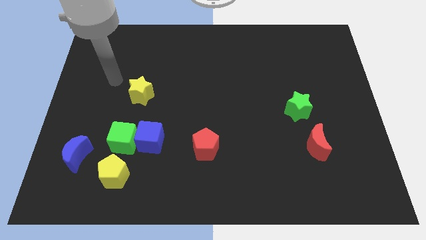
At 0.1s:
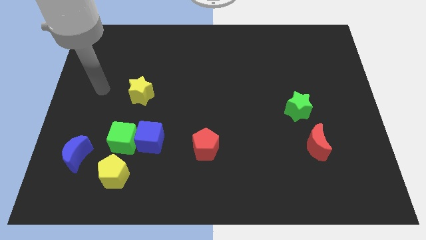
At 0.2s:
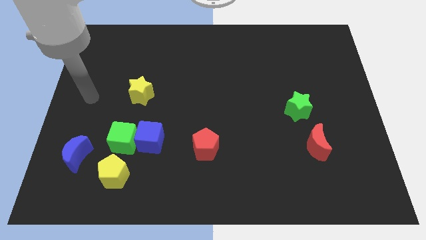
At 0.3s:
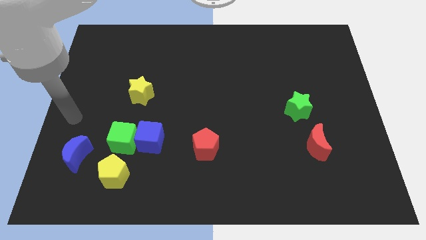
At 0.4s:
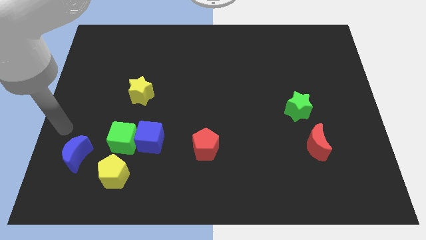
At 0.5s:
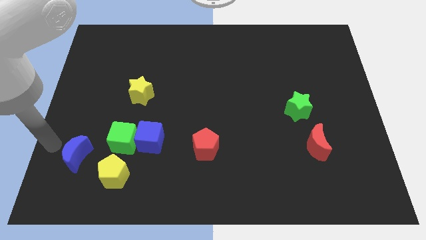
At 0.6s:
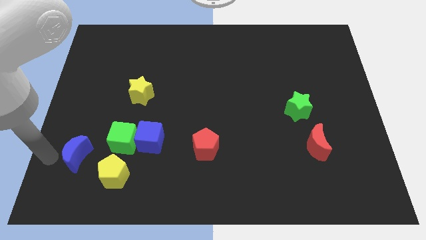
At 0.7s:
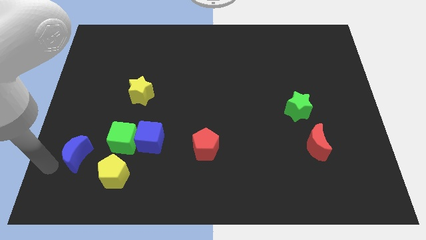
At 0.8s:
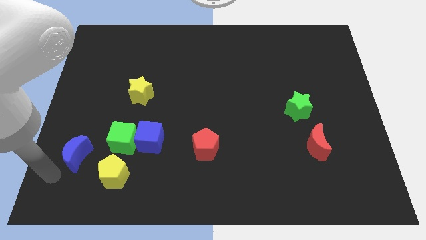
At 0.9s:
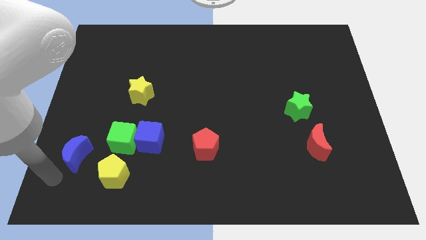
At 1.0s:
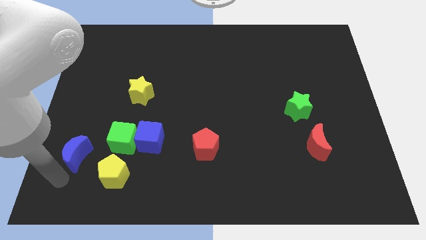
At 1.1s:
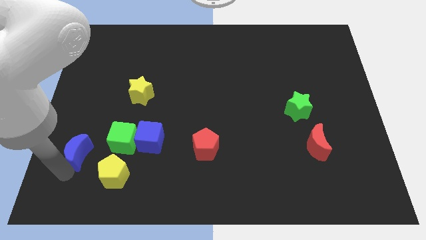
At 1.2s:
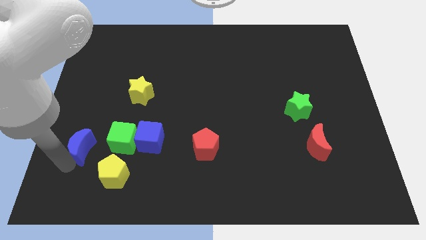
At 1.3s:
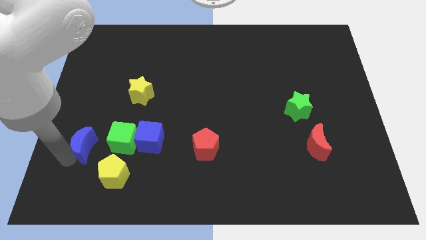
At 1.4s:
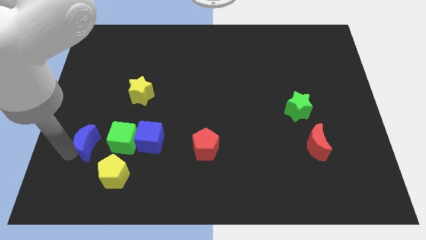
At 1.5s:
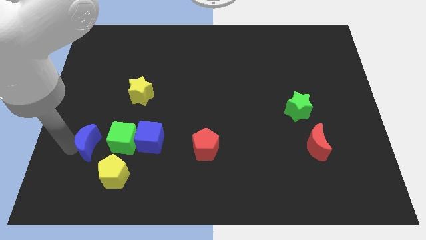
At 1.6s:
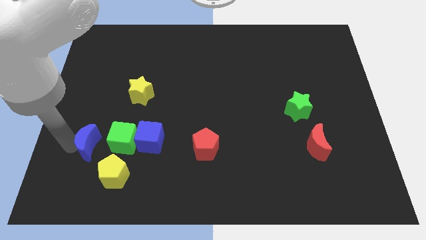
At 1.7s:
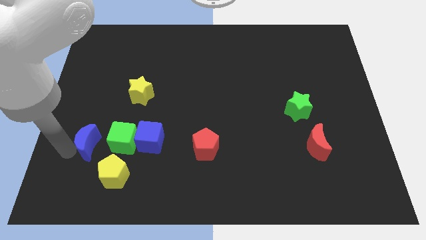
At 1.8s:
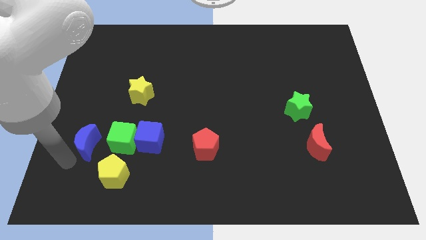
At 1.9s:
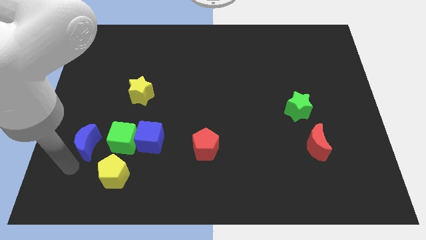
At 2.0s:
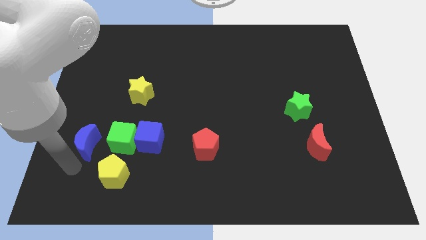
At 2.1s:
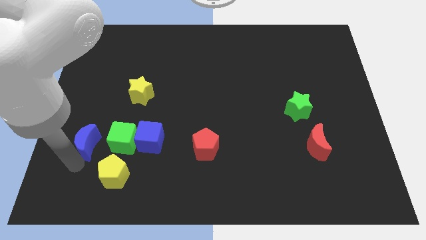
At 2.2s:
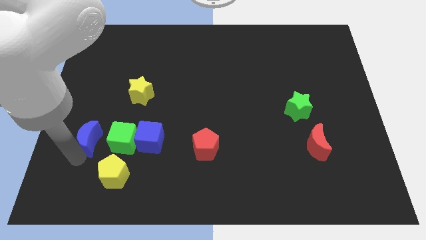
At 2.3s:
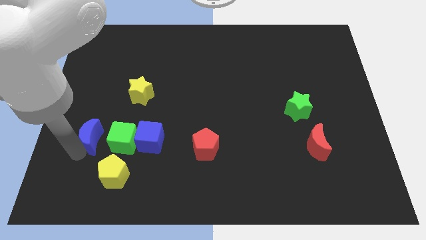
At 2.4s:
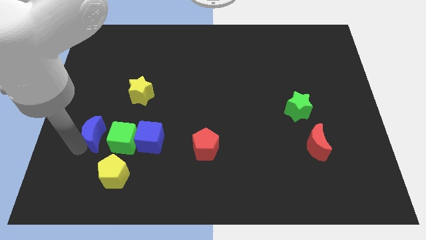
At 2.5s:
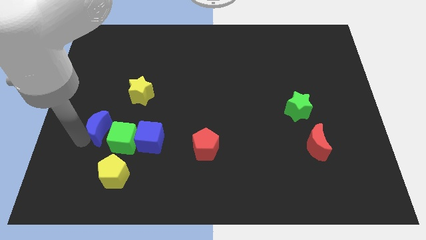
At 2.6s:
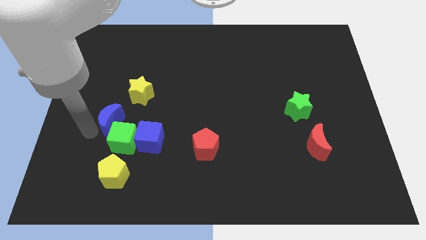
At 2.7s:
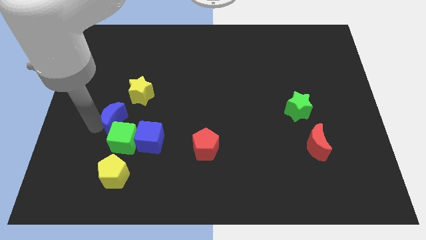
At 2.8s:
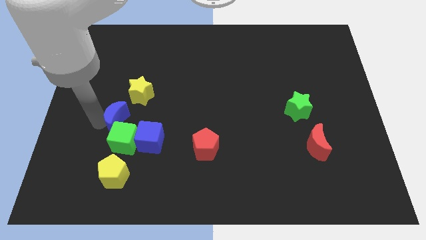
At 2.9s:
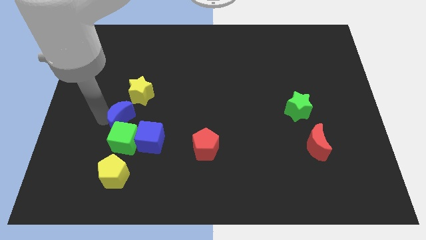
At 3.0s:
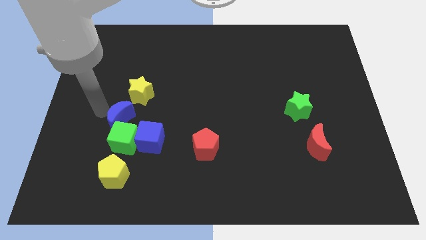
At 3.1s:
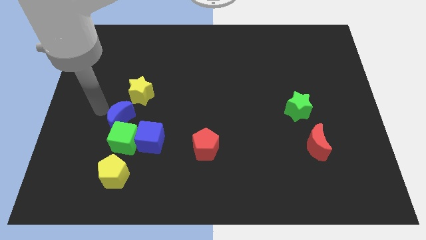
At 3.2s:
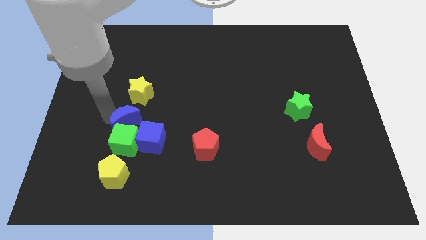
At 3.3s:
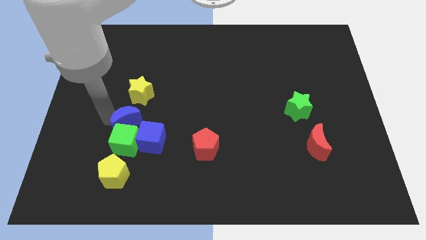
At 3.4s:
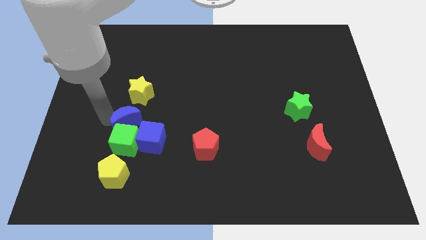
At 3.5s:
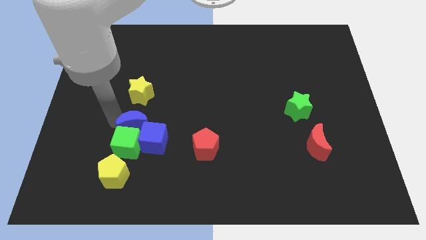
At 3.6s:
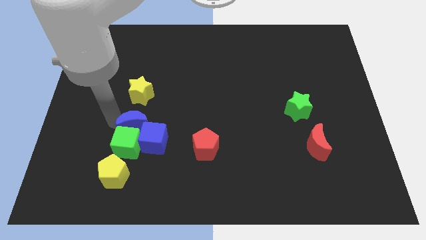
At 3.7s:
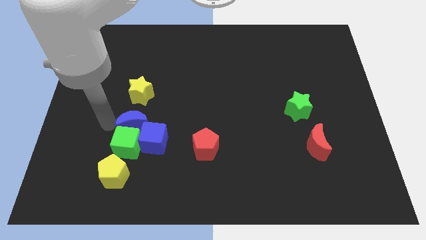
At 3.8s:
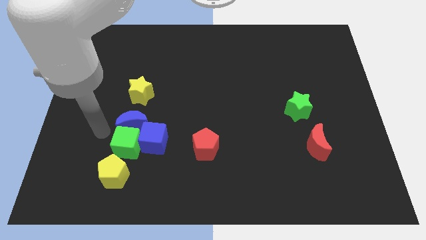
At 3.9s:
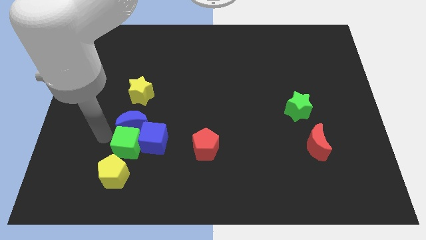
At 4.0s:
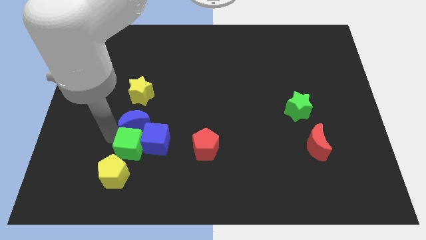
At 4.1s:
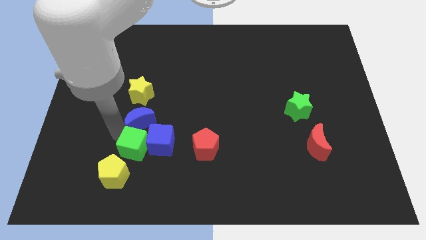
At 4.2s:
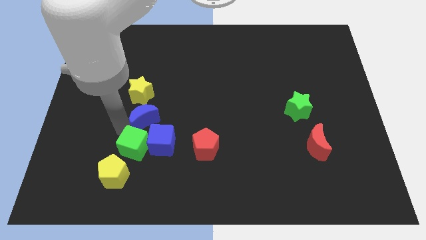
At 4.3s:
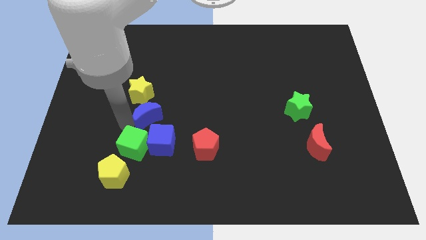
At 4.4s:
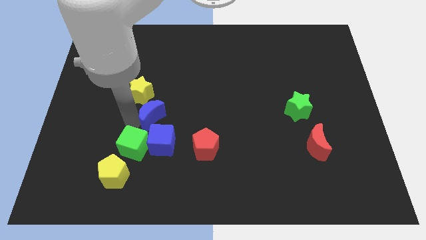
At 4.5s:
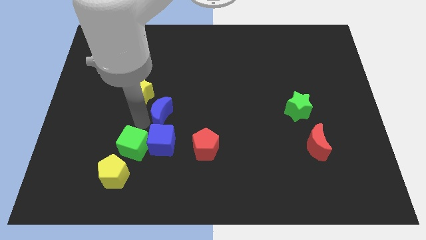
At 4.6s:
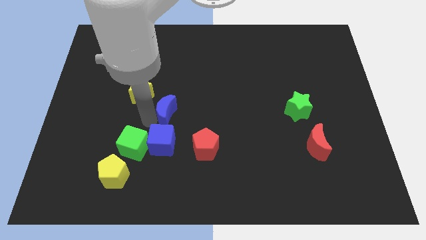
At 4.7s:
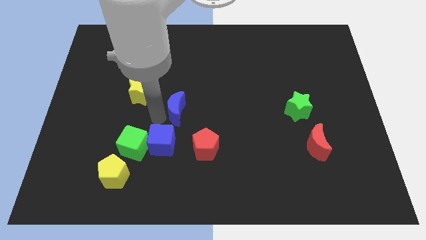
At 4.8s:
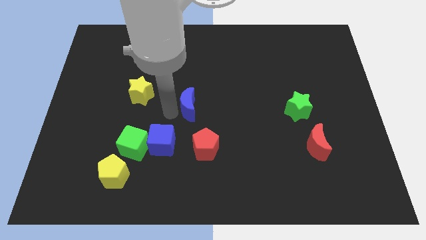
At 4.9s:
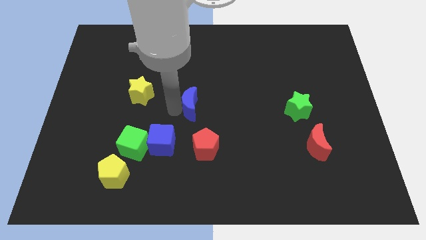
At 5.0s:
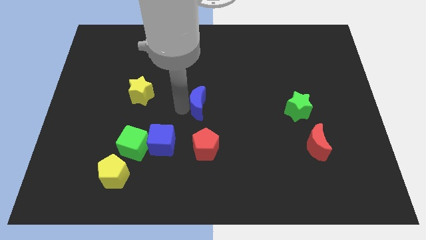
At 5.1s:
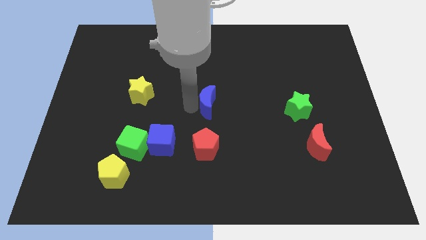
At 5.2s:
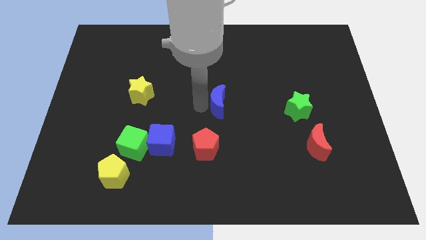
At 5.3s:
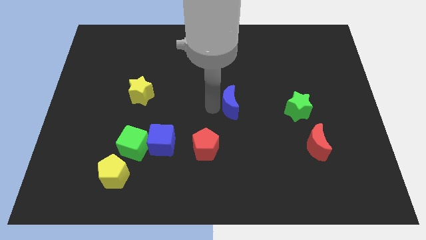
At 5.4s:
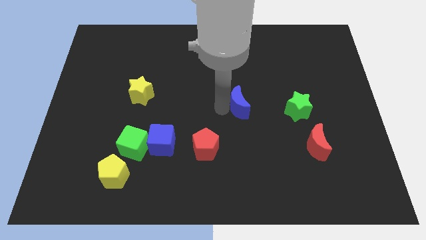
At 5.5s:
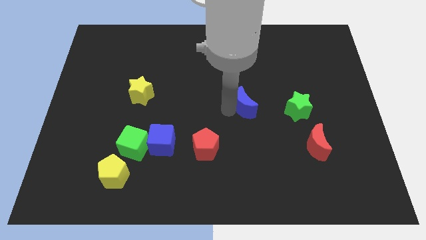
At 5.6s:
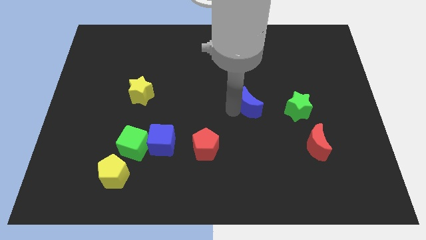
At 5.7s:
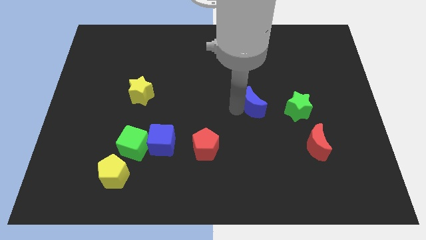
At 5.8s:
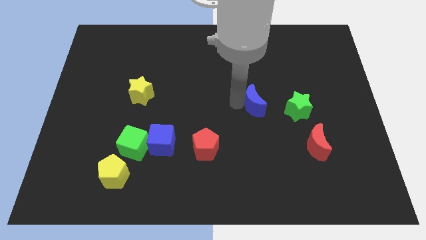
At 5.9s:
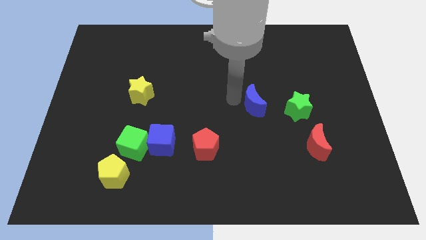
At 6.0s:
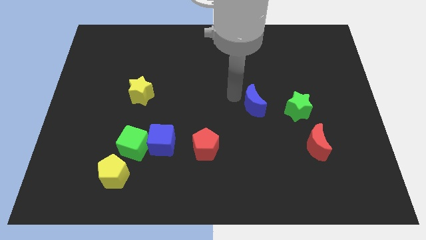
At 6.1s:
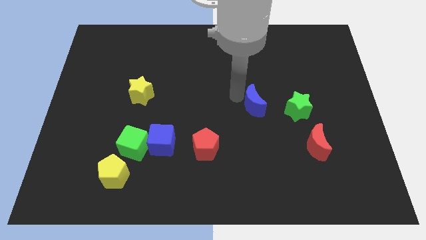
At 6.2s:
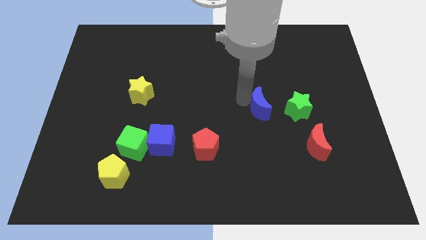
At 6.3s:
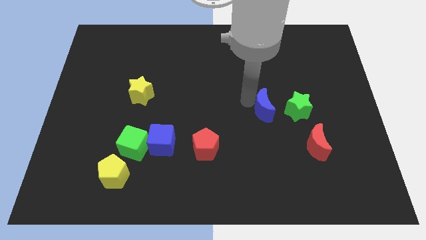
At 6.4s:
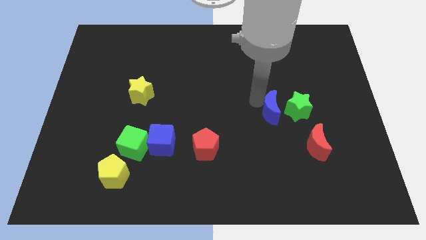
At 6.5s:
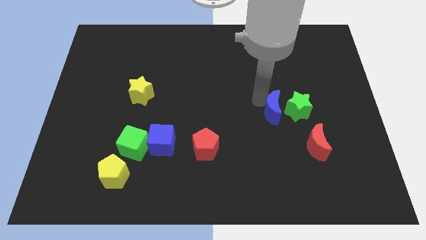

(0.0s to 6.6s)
slide the blue moon towards the green star

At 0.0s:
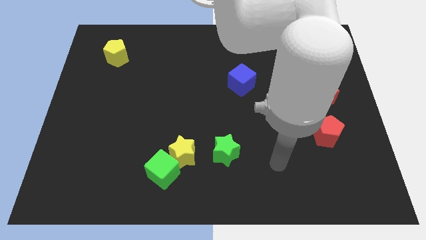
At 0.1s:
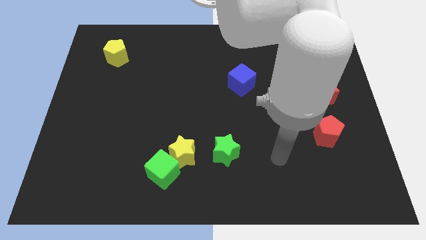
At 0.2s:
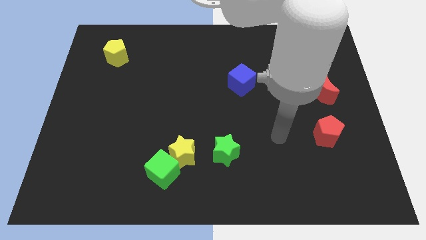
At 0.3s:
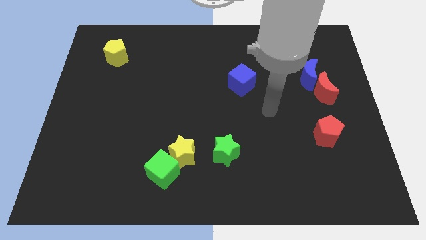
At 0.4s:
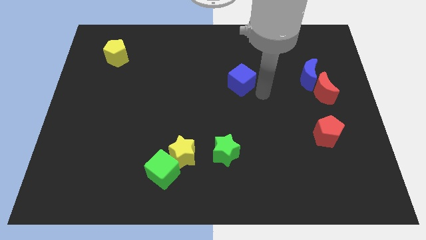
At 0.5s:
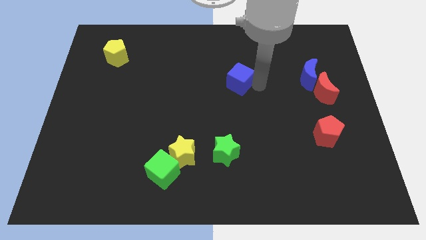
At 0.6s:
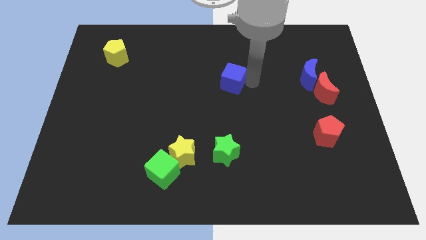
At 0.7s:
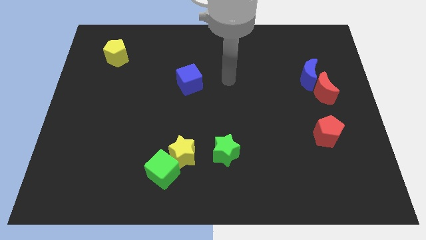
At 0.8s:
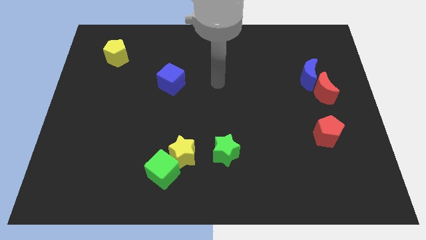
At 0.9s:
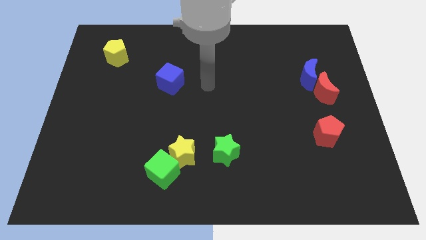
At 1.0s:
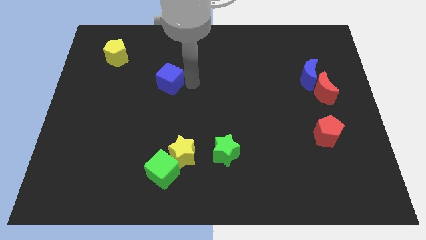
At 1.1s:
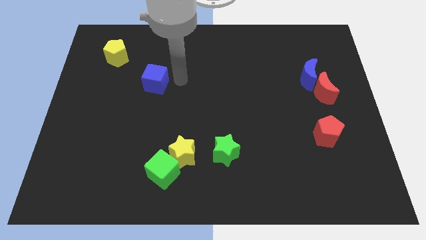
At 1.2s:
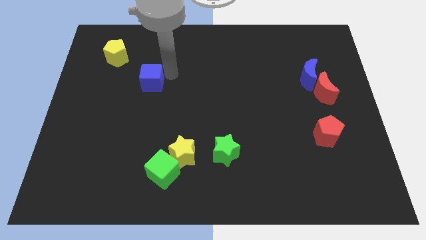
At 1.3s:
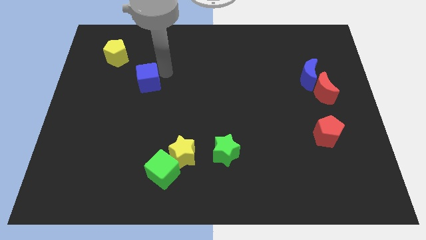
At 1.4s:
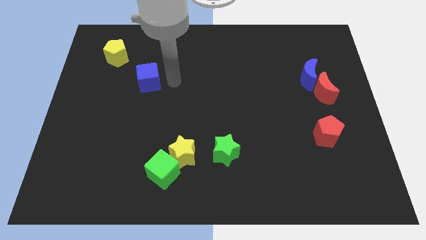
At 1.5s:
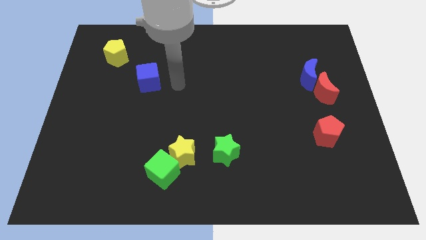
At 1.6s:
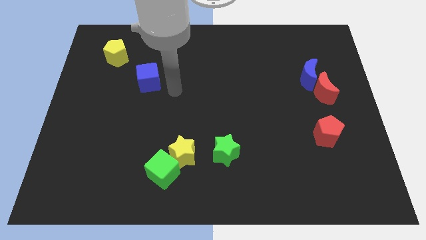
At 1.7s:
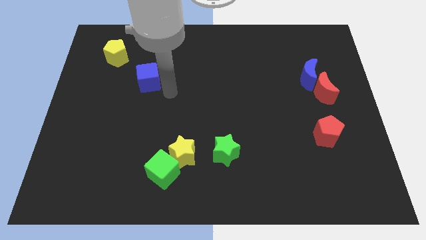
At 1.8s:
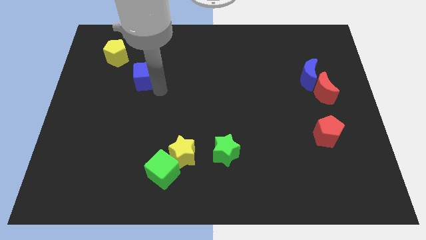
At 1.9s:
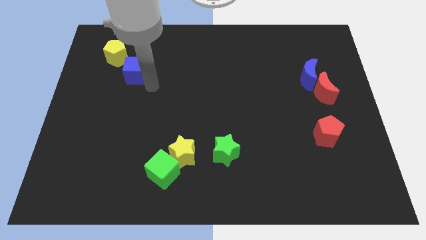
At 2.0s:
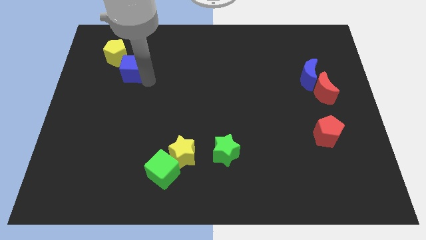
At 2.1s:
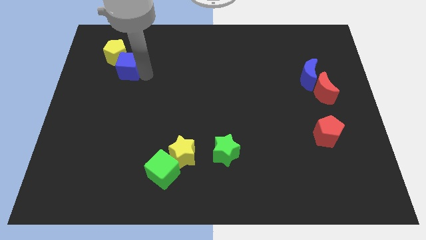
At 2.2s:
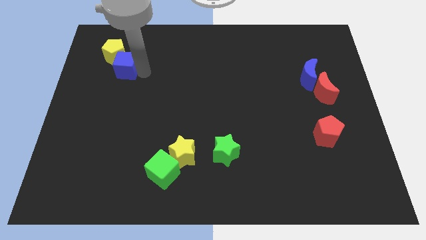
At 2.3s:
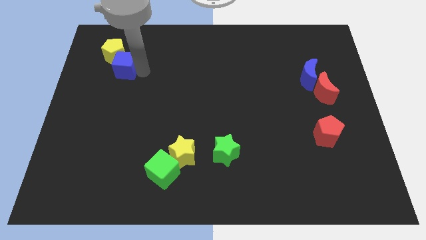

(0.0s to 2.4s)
move the blue cube to the yellow pentagon
